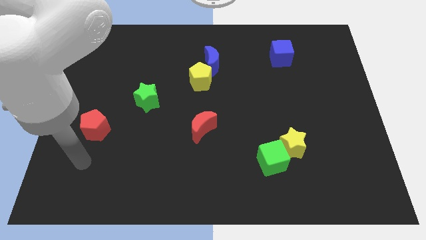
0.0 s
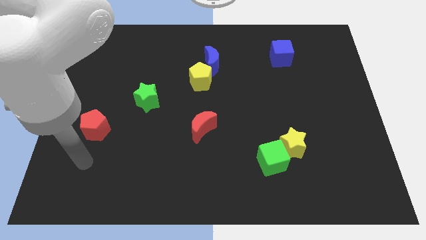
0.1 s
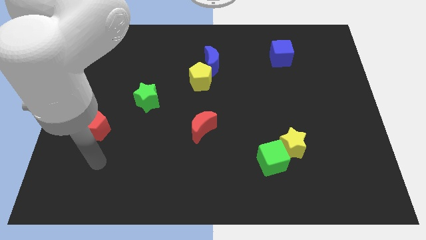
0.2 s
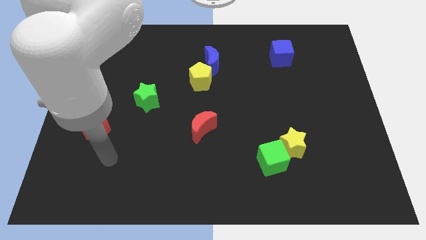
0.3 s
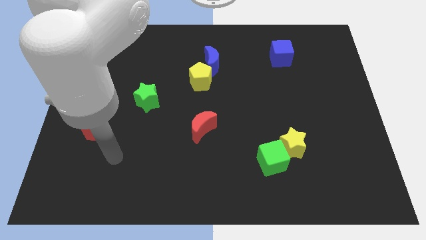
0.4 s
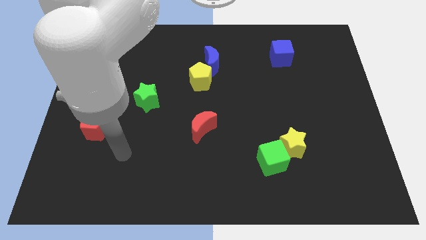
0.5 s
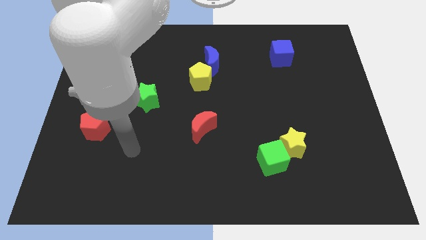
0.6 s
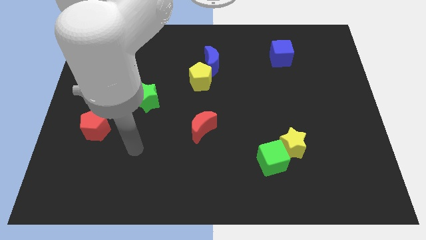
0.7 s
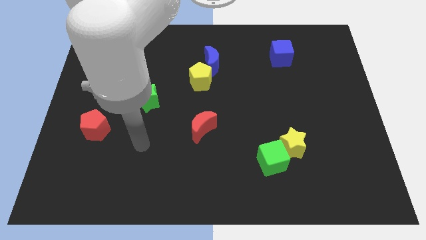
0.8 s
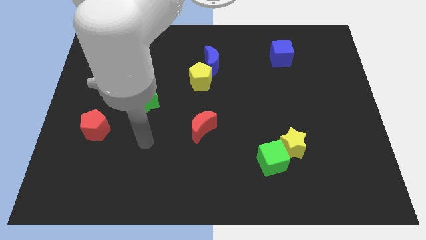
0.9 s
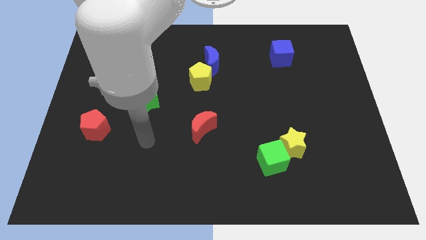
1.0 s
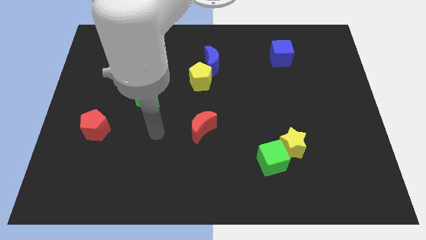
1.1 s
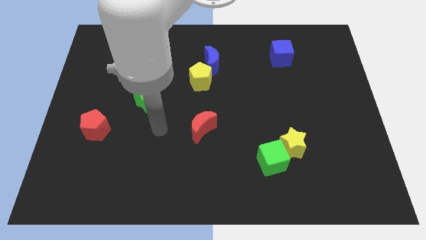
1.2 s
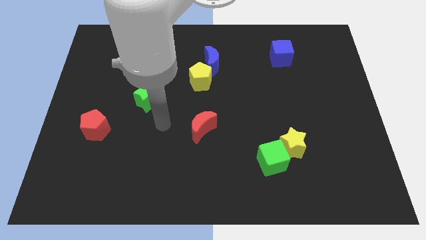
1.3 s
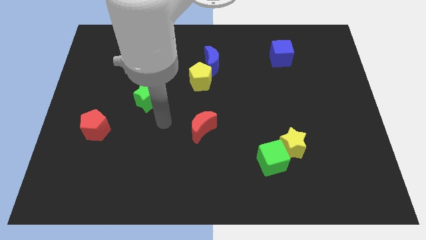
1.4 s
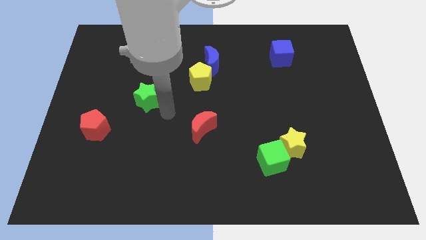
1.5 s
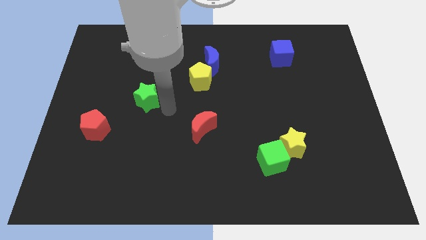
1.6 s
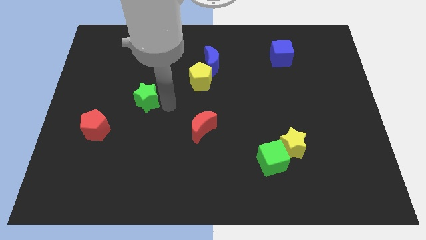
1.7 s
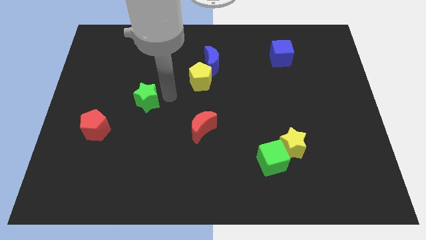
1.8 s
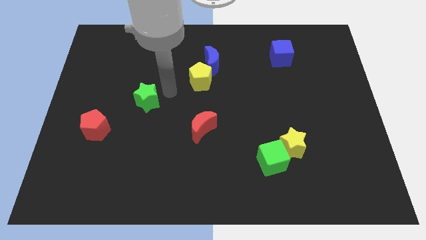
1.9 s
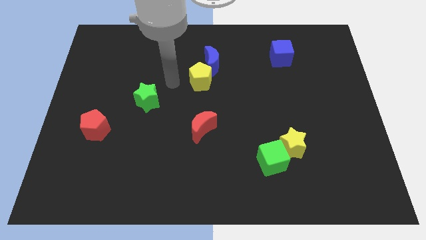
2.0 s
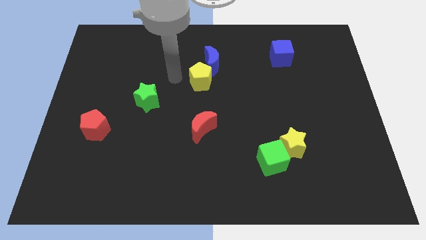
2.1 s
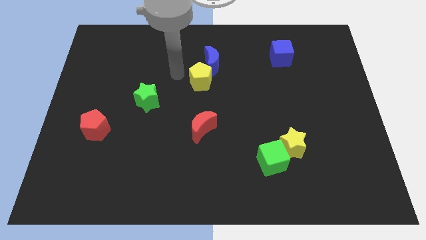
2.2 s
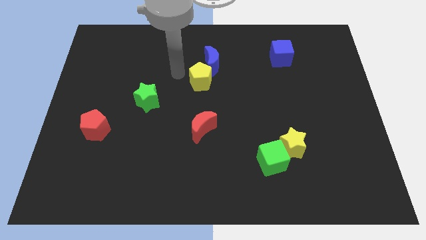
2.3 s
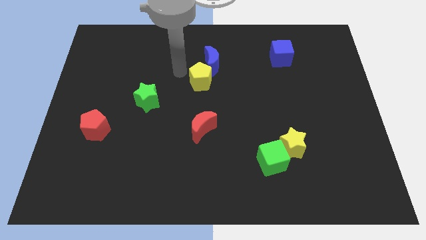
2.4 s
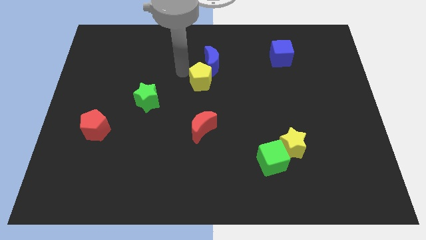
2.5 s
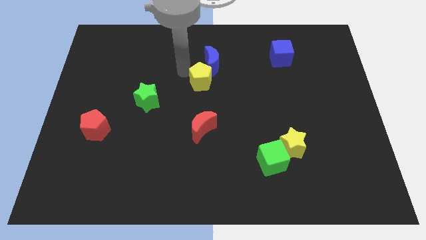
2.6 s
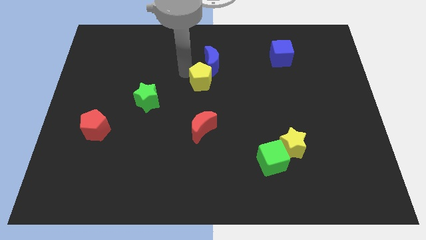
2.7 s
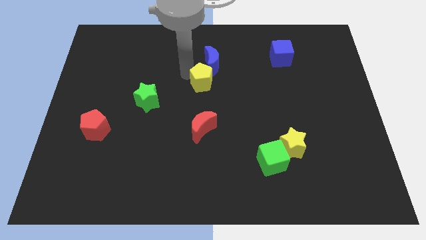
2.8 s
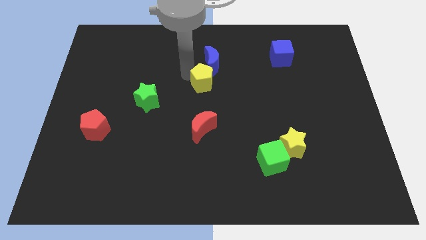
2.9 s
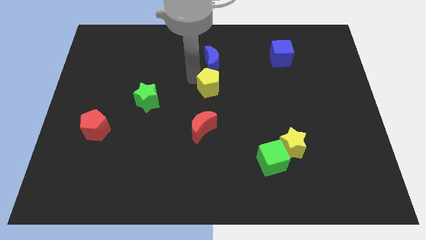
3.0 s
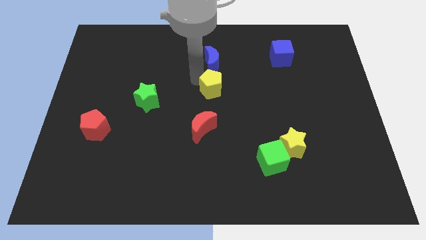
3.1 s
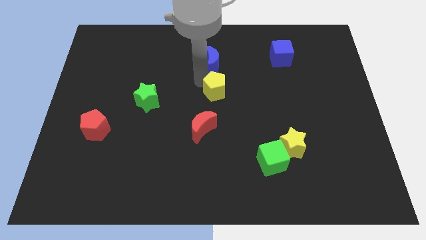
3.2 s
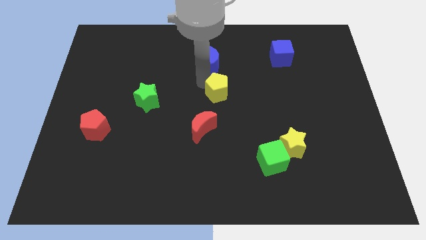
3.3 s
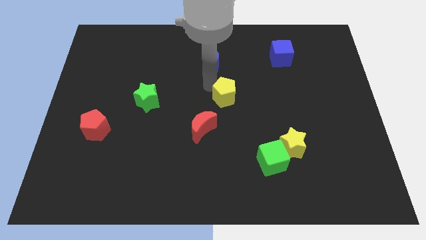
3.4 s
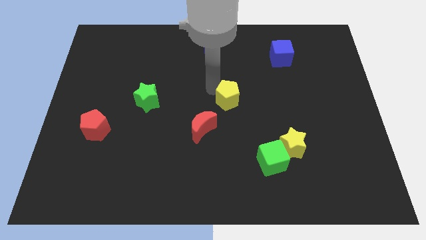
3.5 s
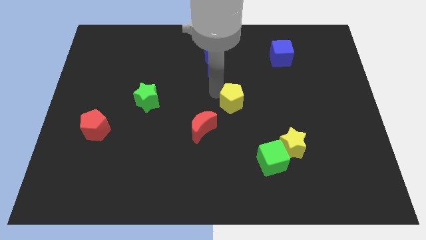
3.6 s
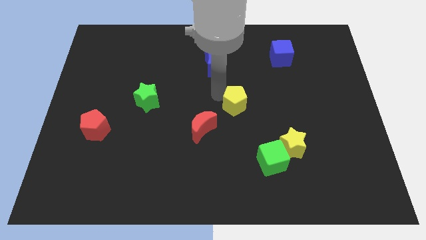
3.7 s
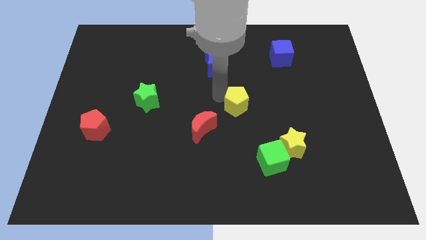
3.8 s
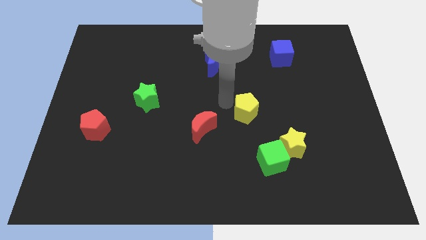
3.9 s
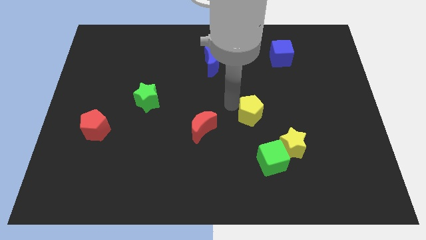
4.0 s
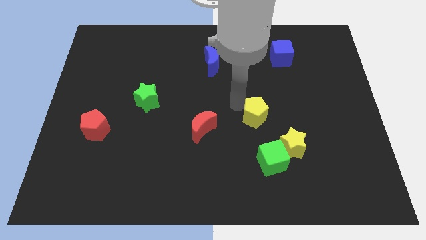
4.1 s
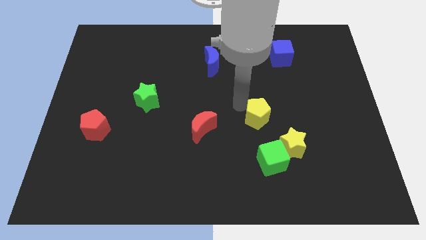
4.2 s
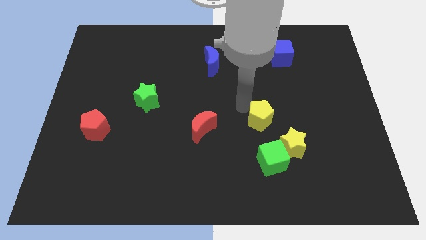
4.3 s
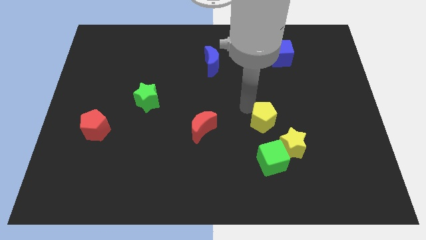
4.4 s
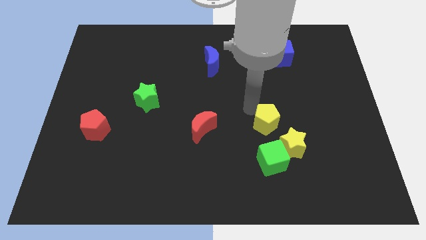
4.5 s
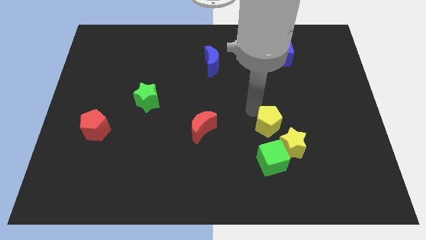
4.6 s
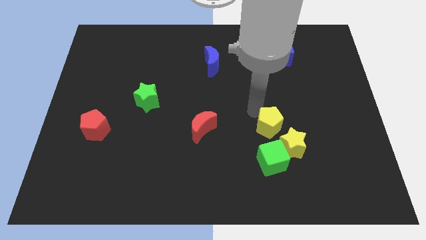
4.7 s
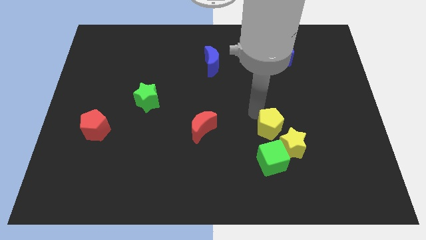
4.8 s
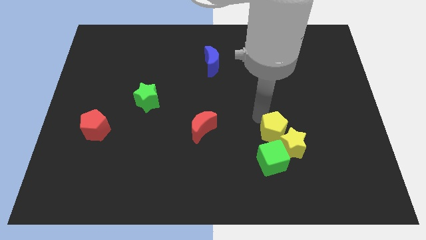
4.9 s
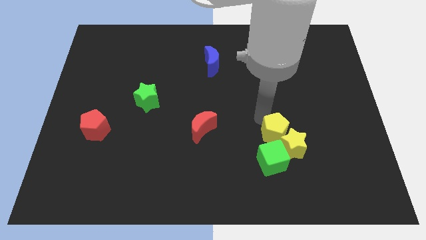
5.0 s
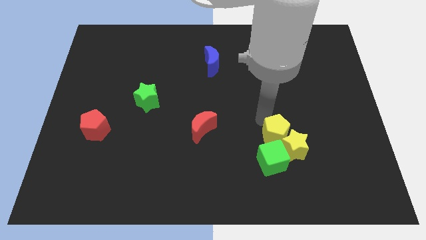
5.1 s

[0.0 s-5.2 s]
move the yellow pentagon next to the yellow star

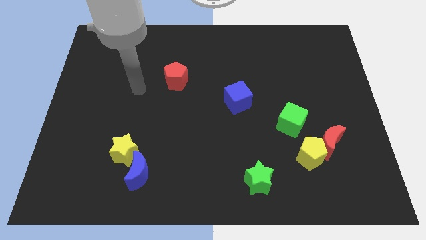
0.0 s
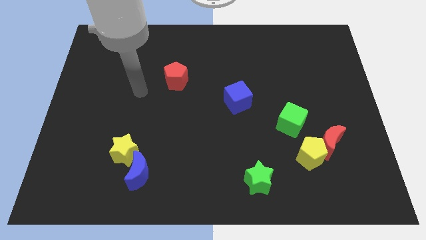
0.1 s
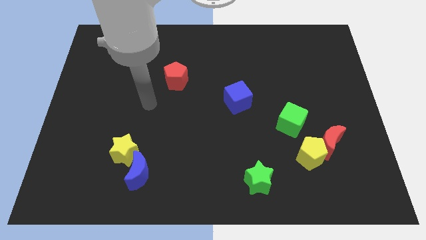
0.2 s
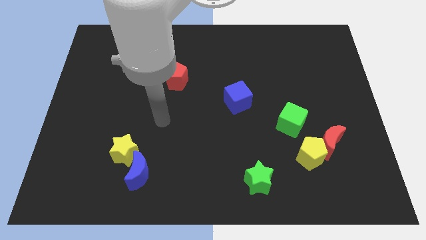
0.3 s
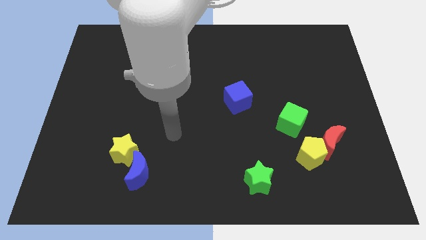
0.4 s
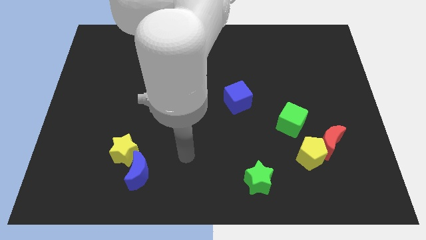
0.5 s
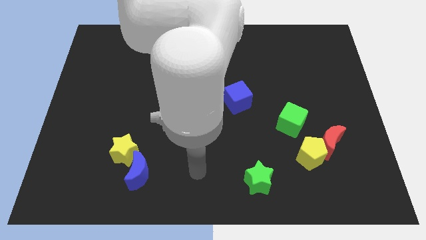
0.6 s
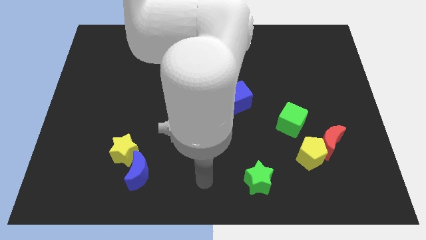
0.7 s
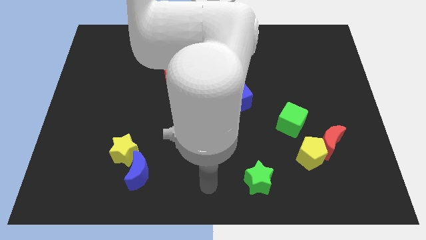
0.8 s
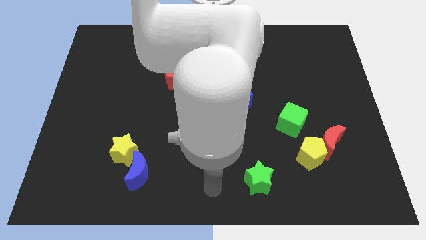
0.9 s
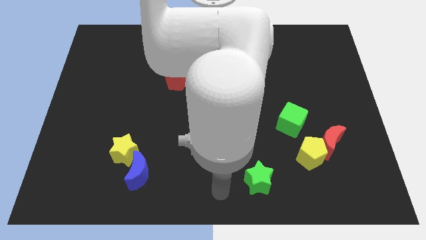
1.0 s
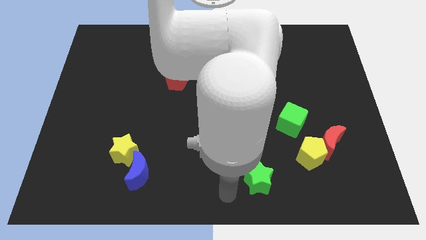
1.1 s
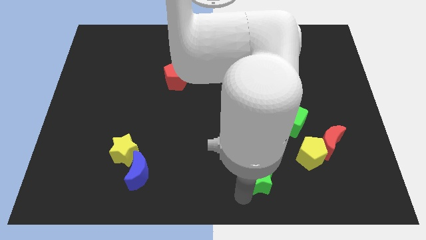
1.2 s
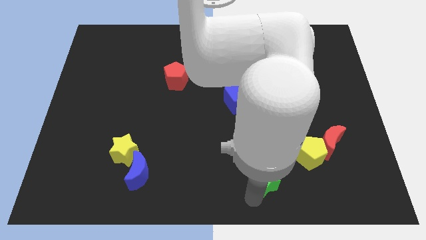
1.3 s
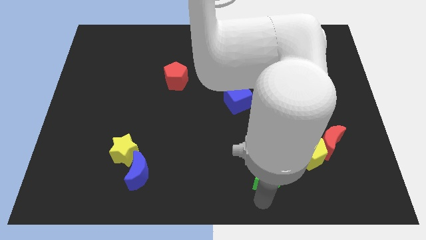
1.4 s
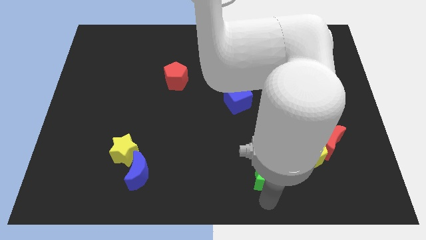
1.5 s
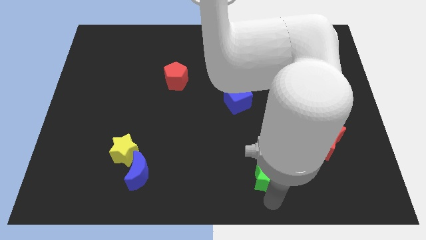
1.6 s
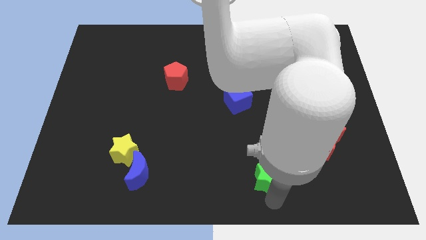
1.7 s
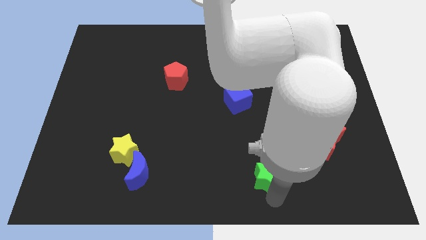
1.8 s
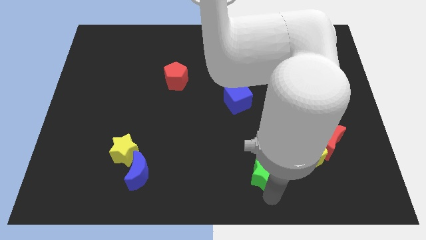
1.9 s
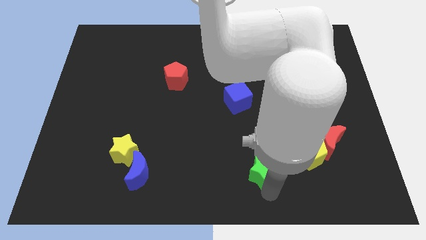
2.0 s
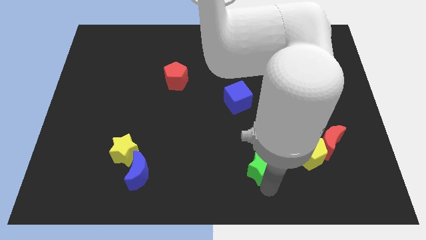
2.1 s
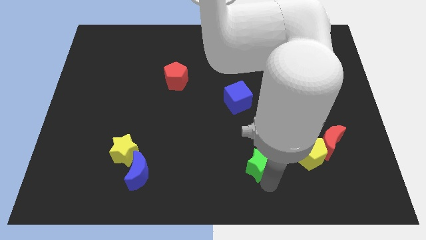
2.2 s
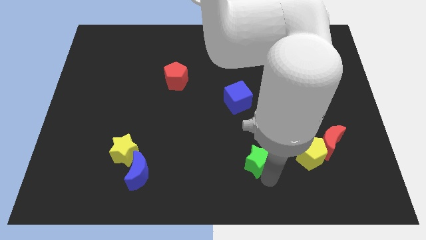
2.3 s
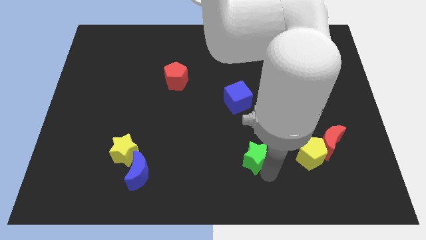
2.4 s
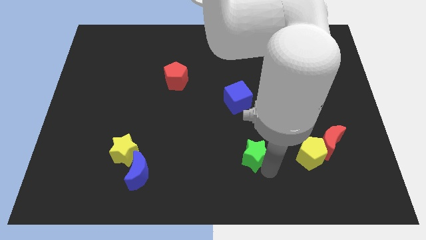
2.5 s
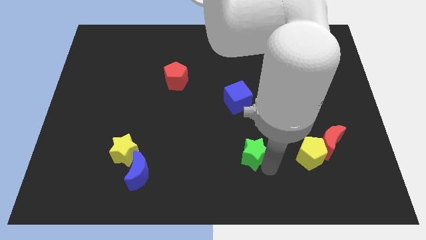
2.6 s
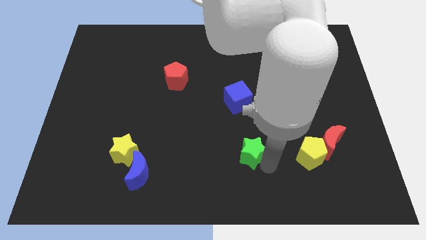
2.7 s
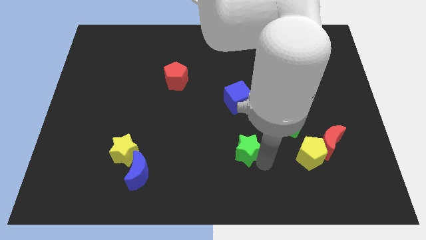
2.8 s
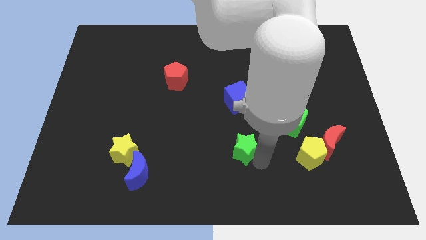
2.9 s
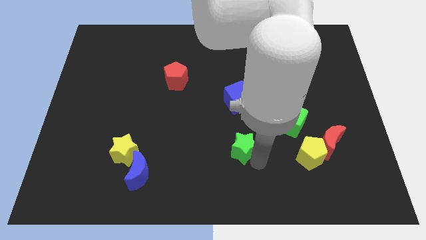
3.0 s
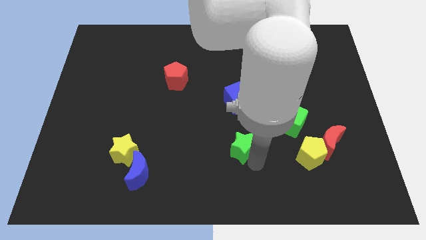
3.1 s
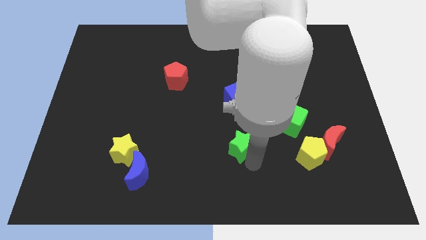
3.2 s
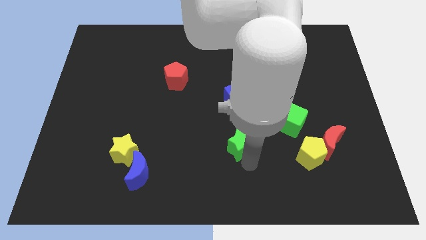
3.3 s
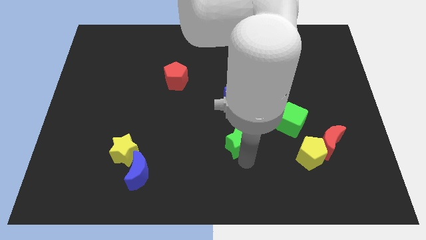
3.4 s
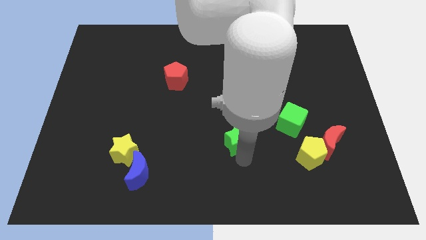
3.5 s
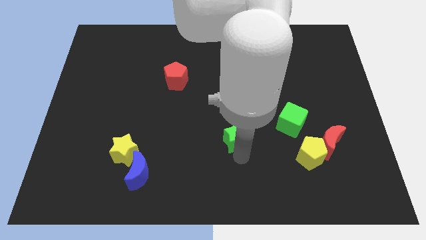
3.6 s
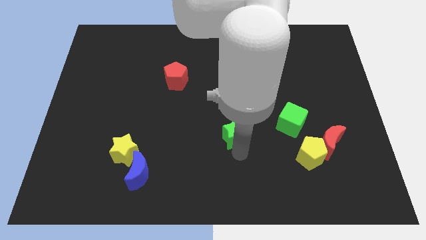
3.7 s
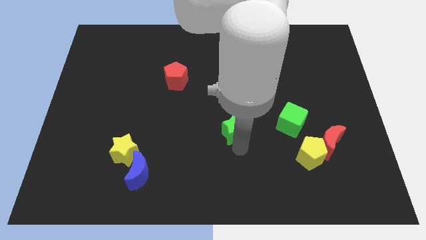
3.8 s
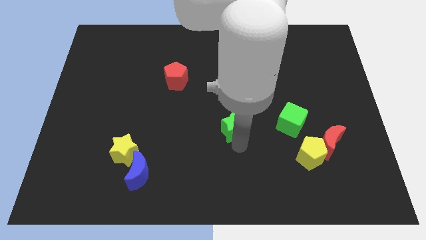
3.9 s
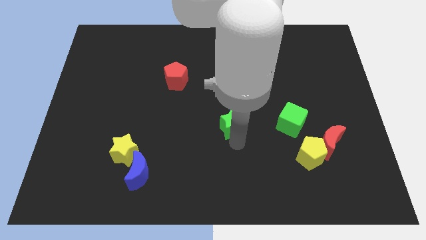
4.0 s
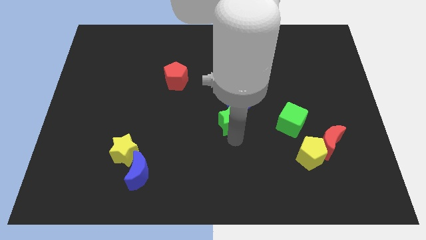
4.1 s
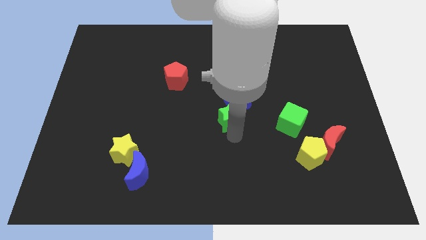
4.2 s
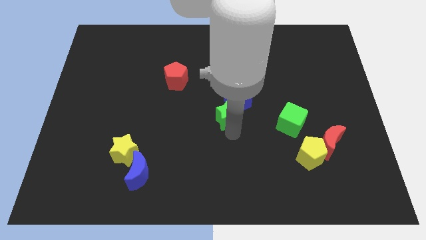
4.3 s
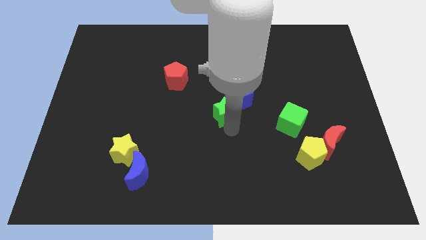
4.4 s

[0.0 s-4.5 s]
push the green star close to the blue cube
